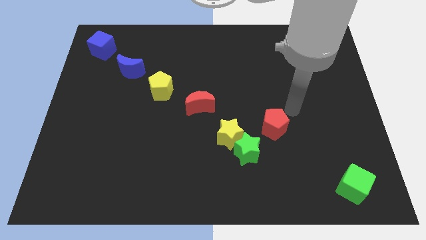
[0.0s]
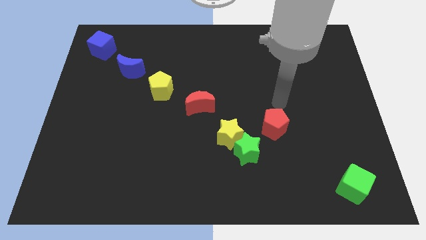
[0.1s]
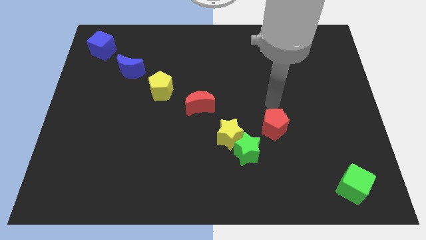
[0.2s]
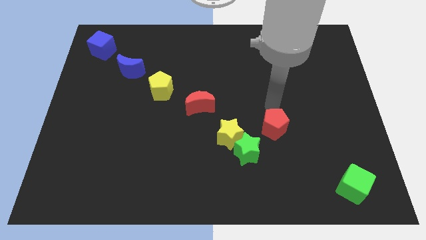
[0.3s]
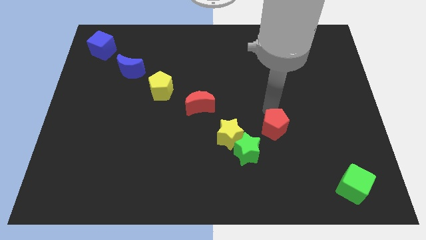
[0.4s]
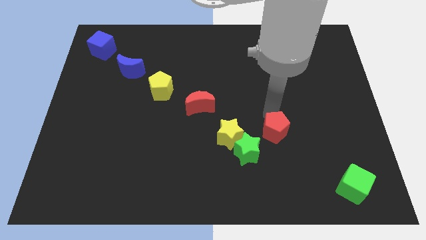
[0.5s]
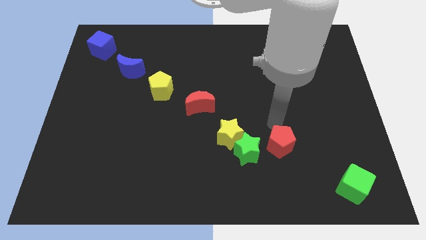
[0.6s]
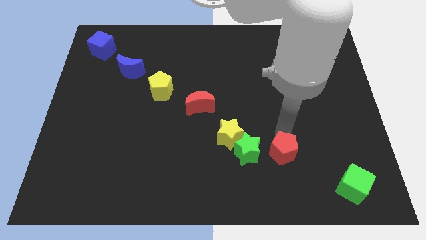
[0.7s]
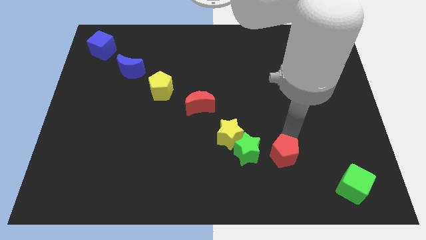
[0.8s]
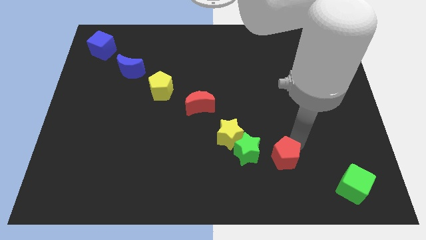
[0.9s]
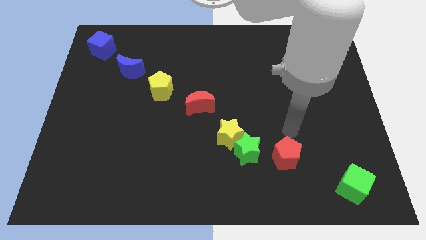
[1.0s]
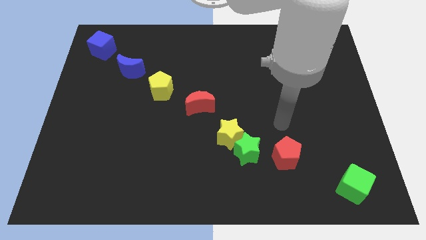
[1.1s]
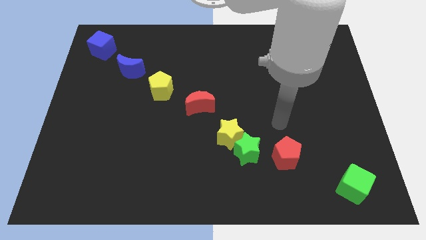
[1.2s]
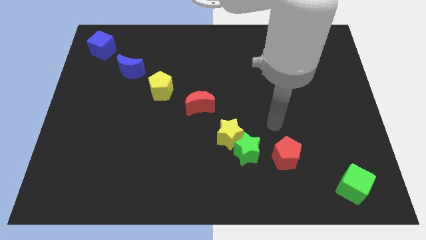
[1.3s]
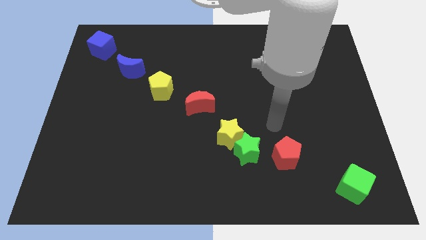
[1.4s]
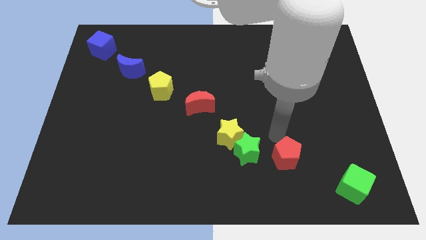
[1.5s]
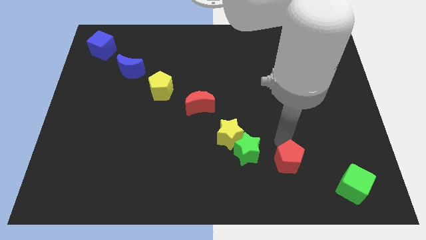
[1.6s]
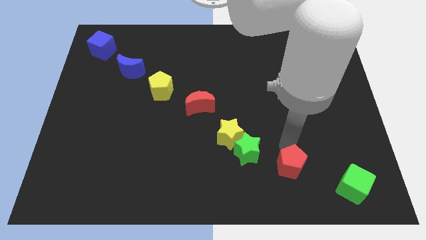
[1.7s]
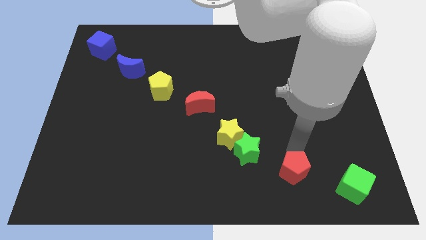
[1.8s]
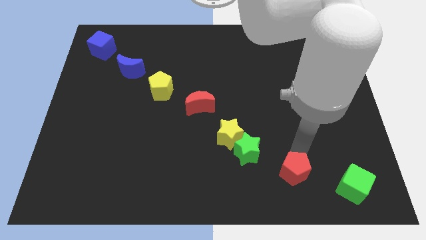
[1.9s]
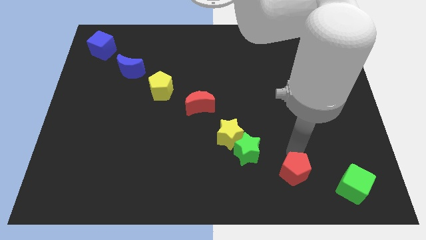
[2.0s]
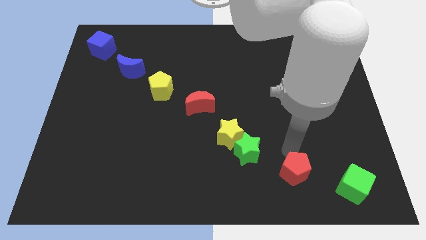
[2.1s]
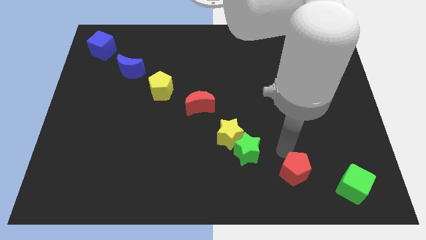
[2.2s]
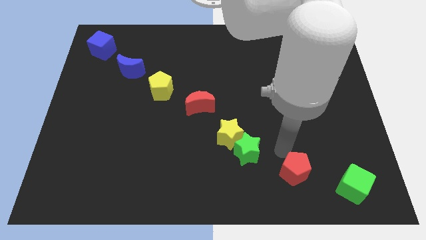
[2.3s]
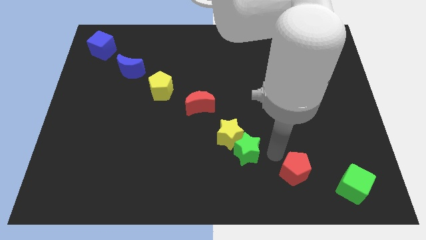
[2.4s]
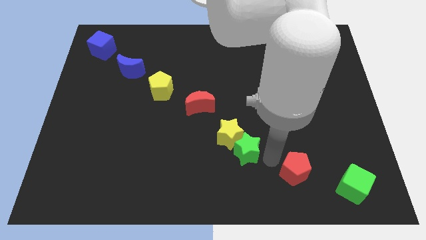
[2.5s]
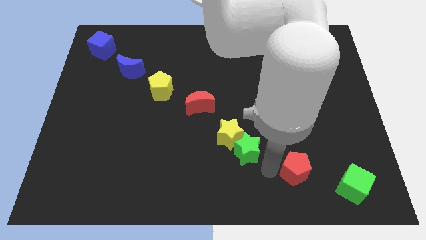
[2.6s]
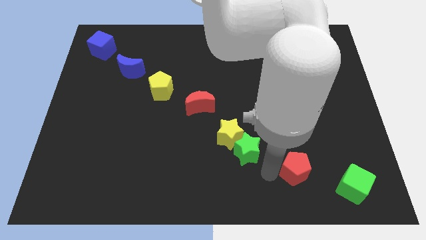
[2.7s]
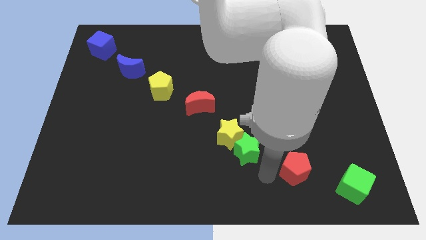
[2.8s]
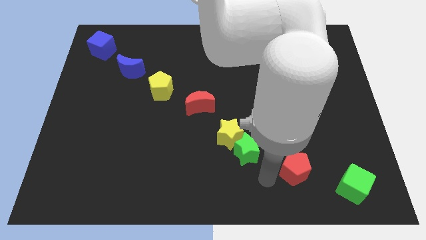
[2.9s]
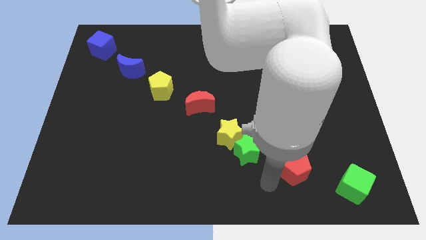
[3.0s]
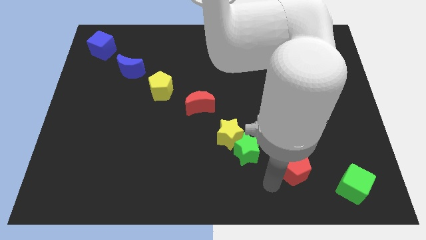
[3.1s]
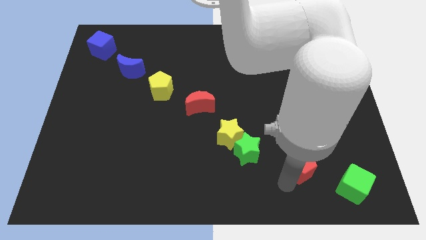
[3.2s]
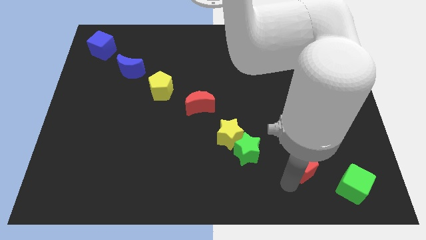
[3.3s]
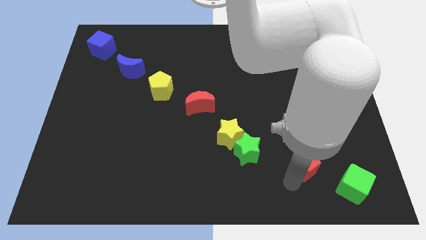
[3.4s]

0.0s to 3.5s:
push the red pentagon towards the bottom right of the board

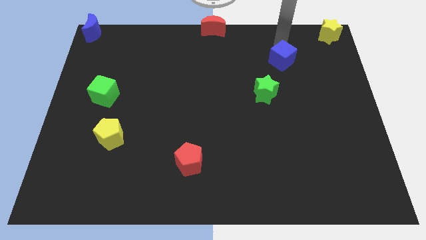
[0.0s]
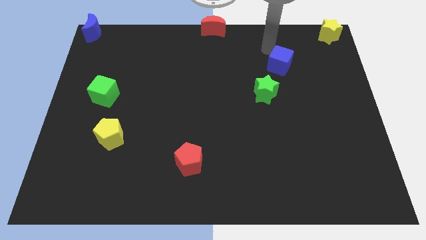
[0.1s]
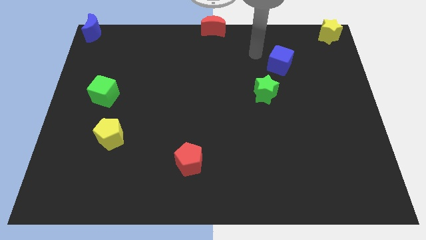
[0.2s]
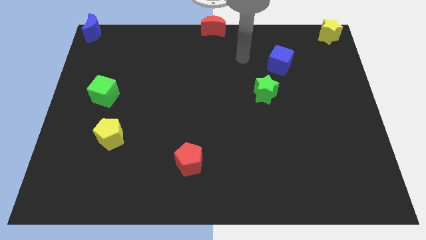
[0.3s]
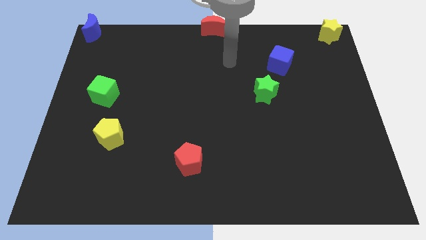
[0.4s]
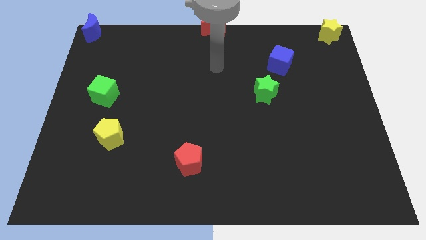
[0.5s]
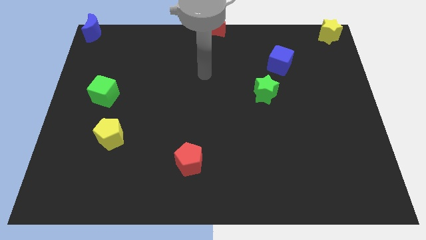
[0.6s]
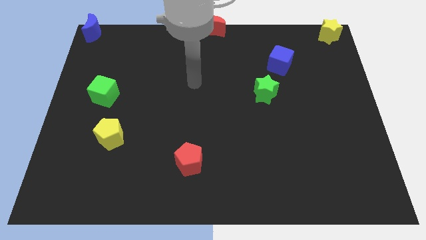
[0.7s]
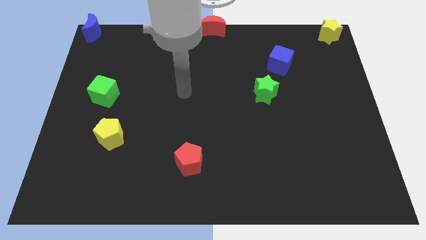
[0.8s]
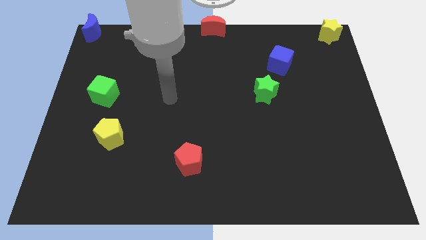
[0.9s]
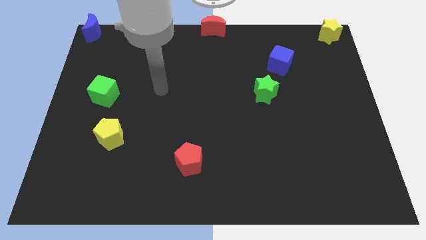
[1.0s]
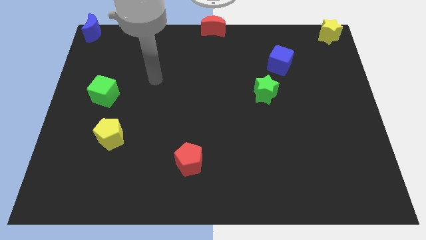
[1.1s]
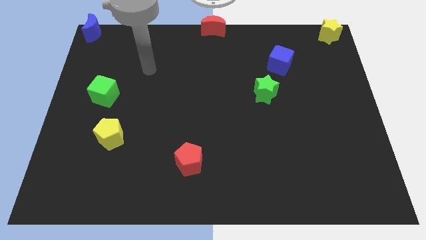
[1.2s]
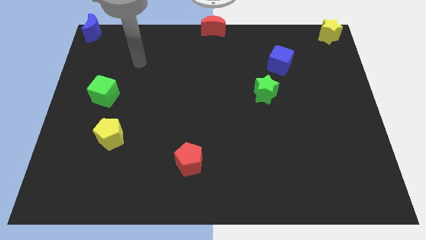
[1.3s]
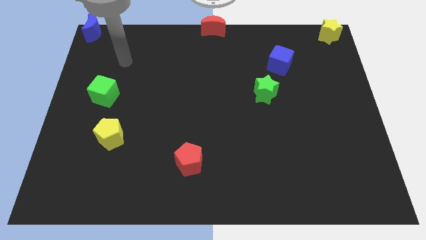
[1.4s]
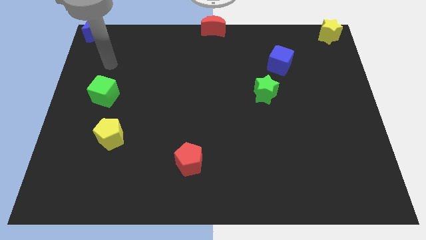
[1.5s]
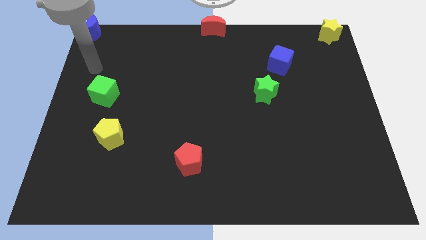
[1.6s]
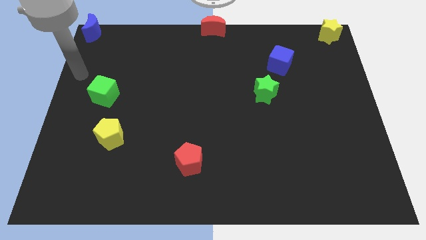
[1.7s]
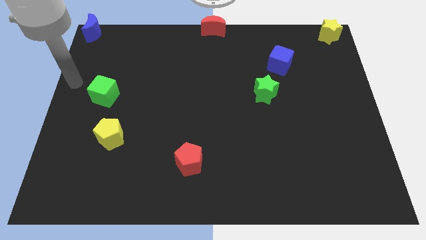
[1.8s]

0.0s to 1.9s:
move your hand towrads the left of the green cube

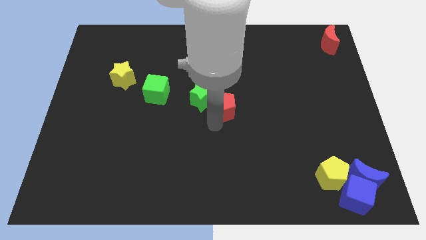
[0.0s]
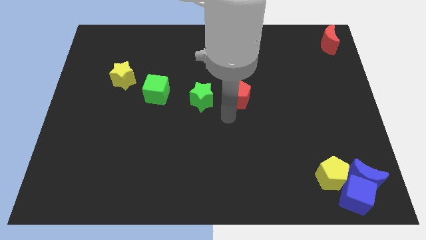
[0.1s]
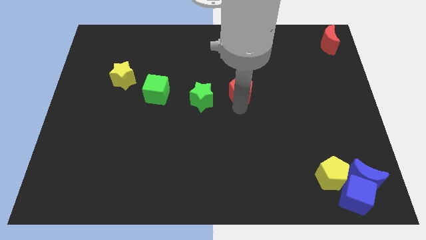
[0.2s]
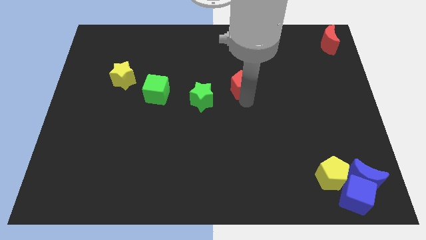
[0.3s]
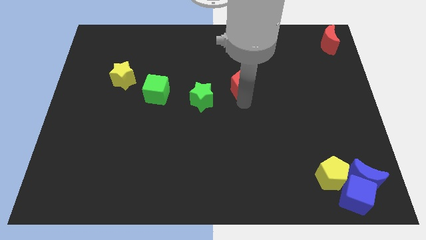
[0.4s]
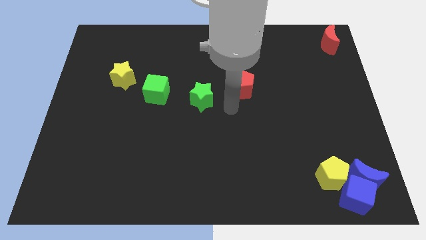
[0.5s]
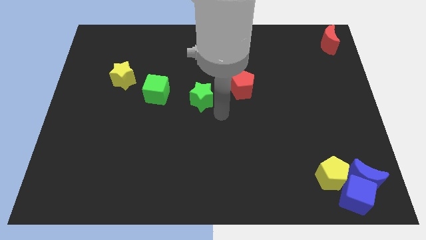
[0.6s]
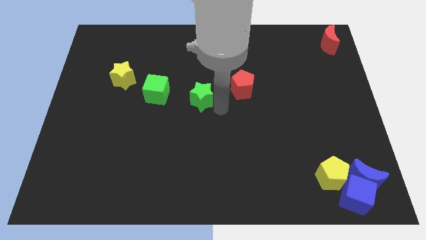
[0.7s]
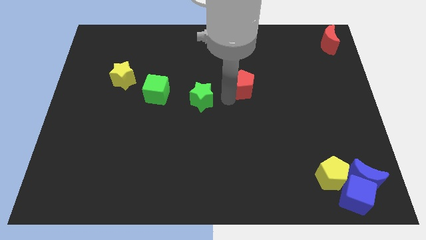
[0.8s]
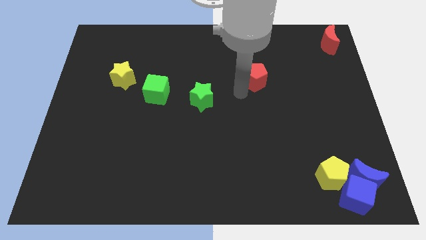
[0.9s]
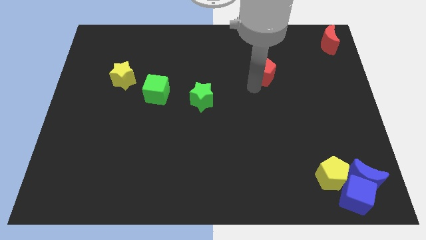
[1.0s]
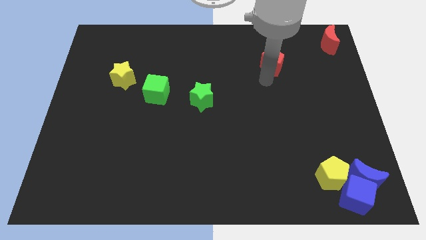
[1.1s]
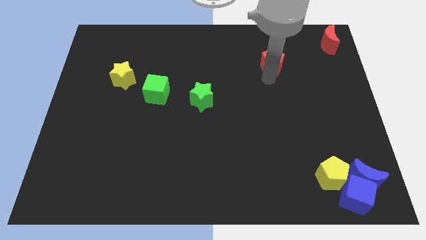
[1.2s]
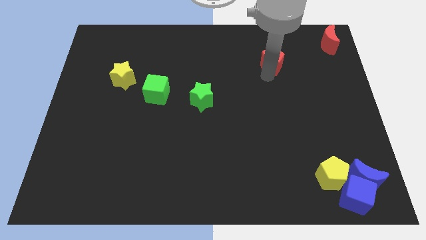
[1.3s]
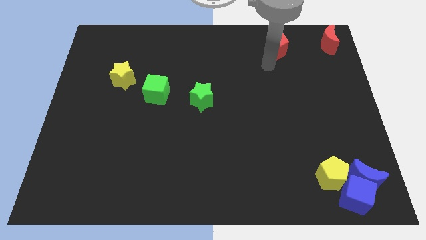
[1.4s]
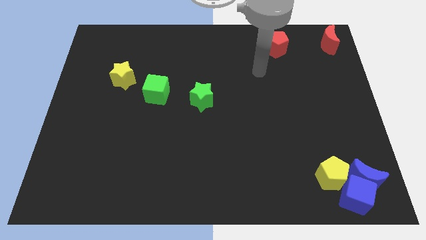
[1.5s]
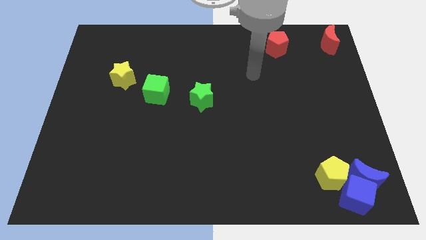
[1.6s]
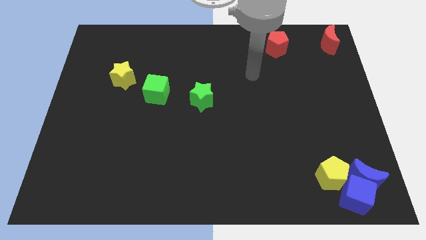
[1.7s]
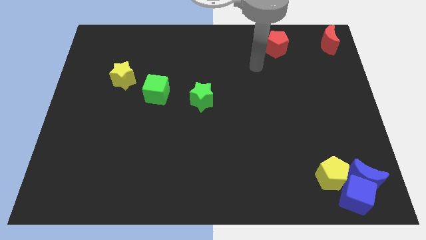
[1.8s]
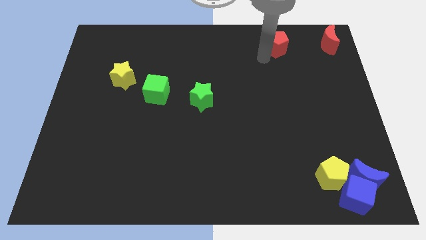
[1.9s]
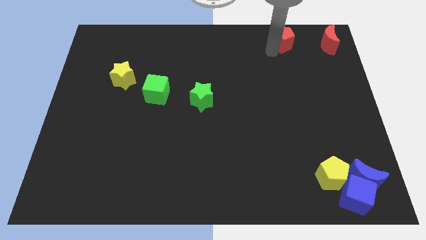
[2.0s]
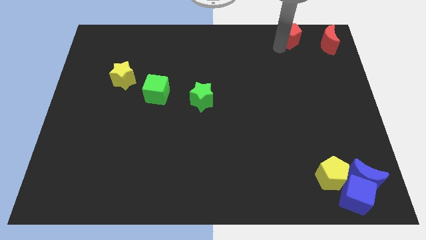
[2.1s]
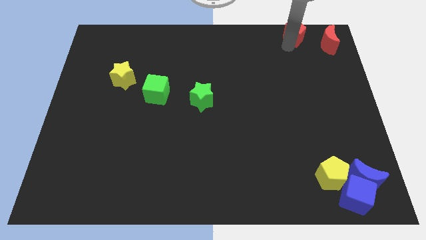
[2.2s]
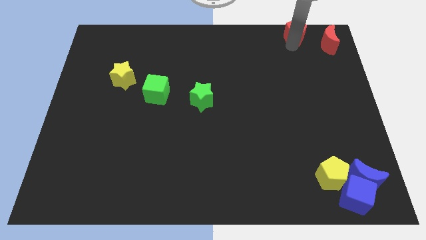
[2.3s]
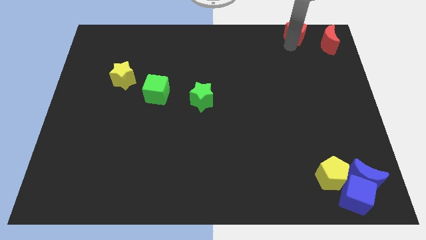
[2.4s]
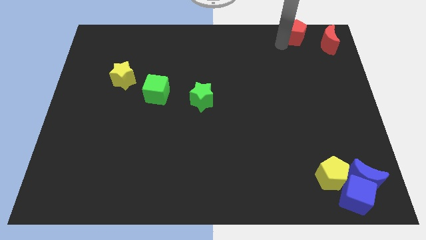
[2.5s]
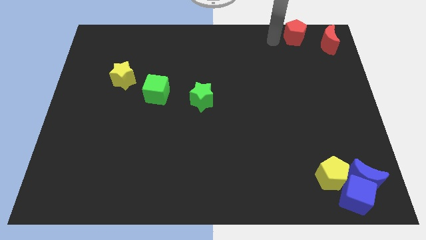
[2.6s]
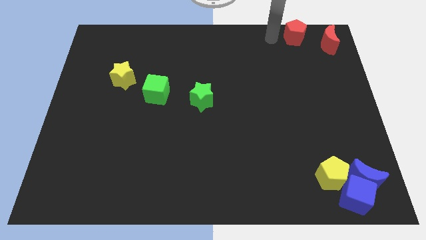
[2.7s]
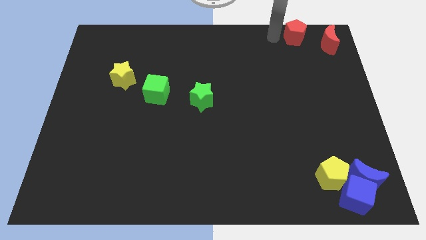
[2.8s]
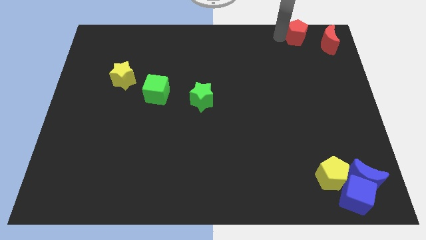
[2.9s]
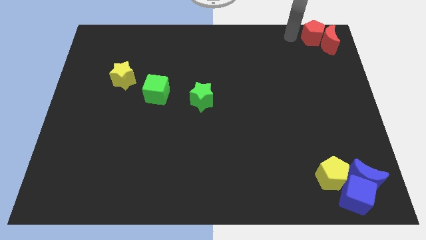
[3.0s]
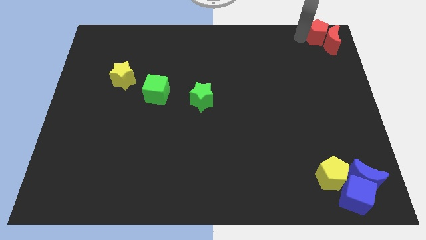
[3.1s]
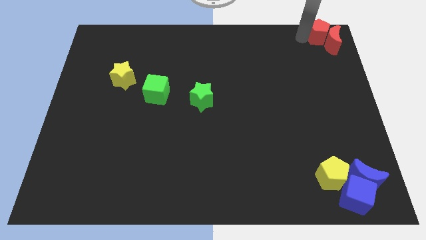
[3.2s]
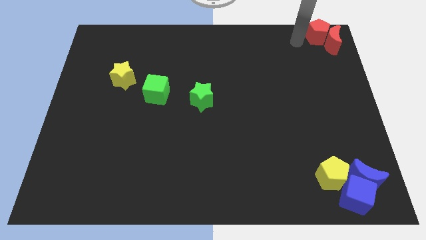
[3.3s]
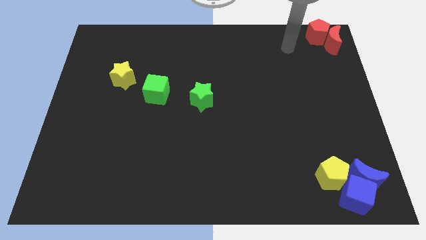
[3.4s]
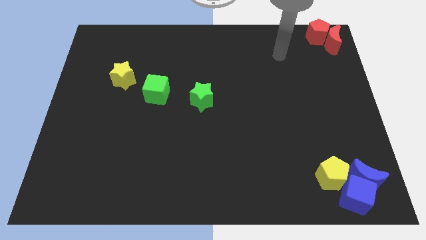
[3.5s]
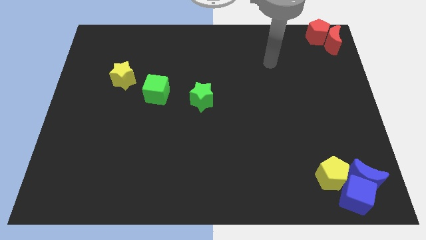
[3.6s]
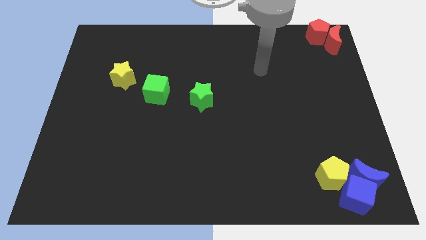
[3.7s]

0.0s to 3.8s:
push red pentagon in to red moon
